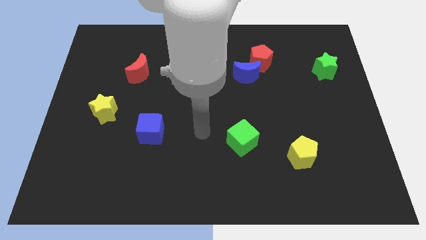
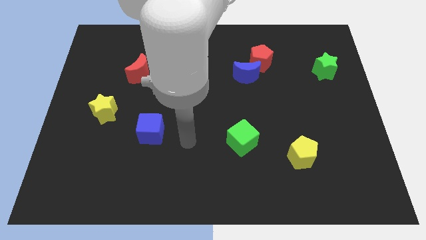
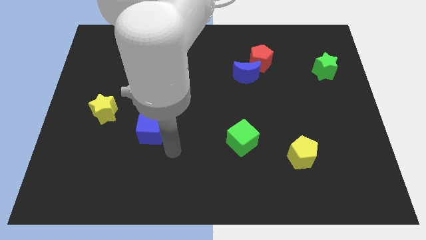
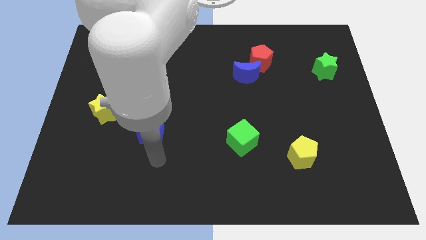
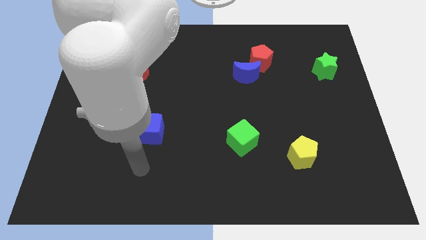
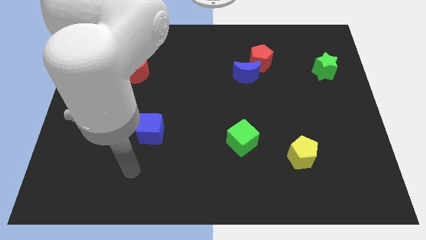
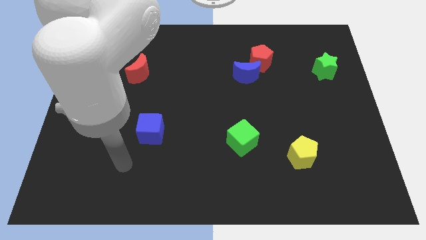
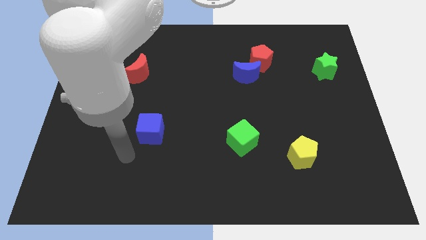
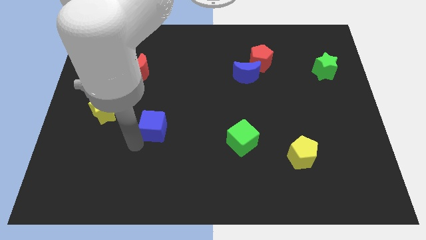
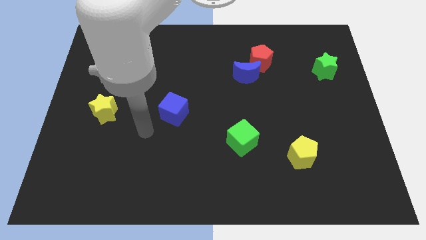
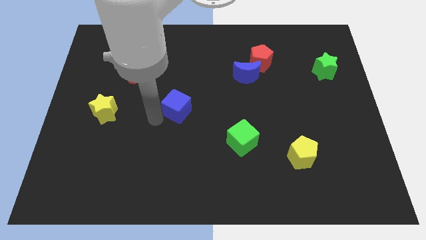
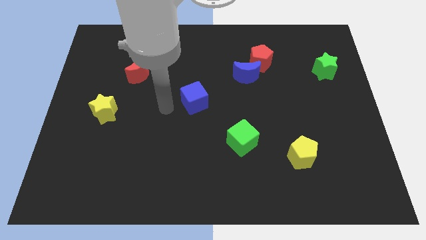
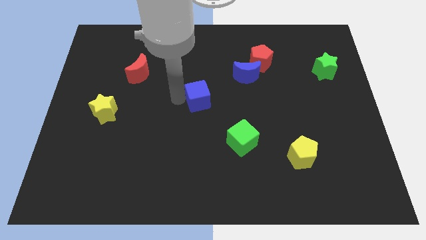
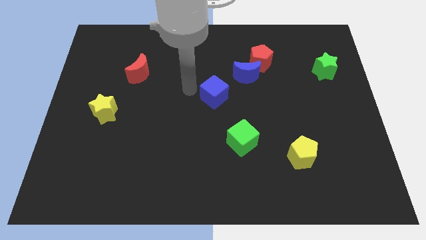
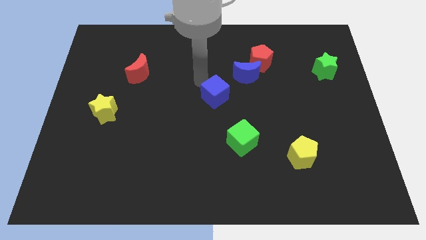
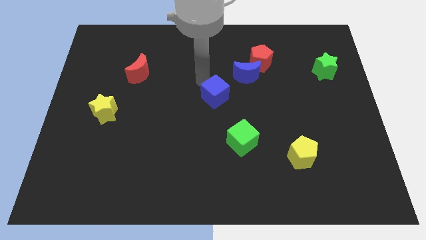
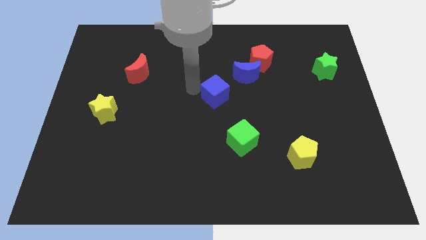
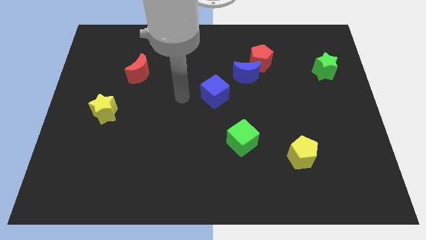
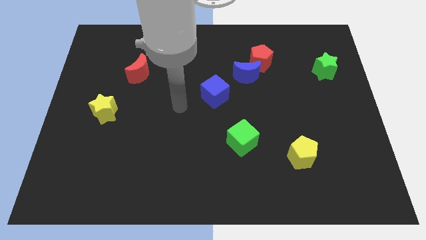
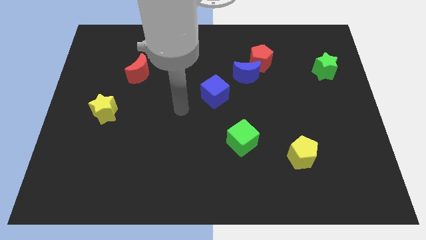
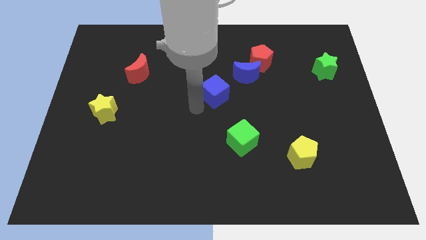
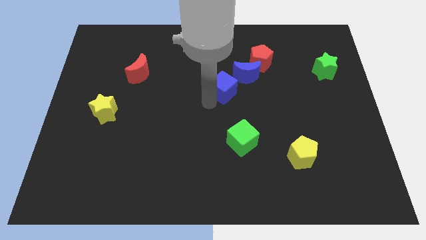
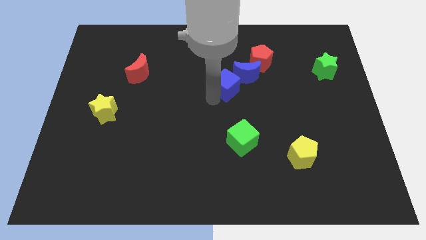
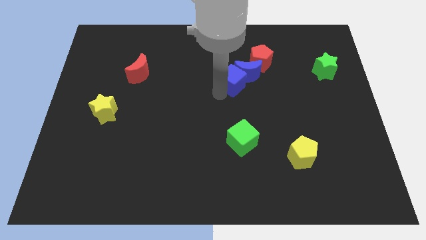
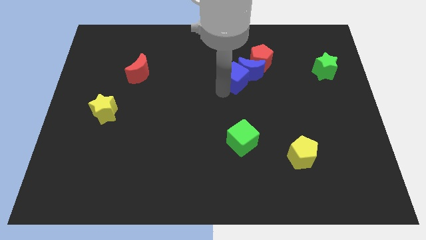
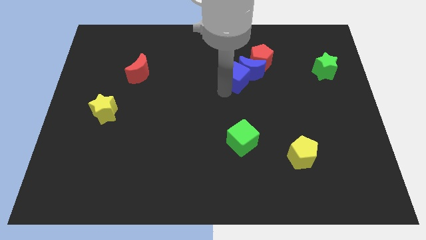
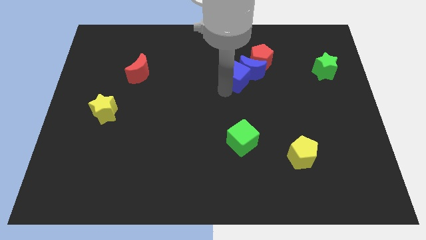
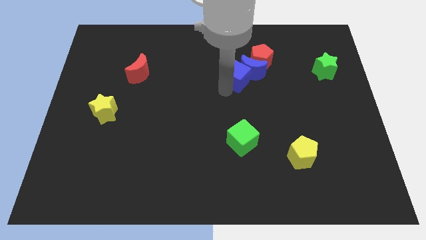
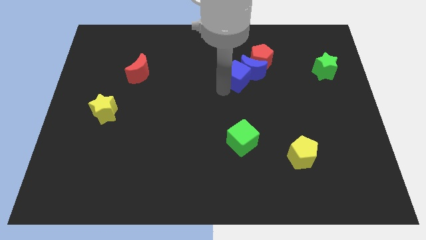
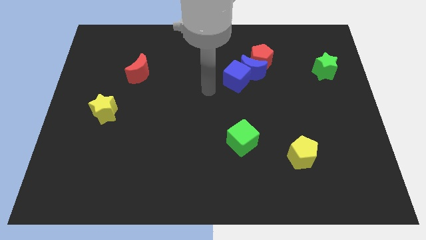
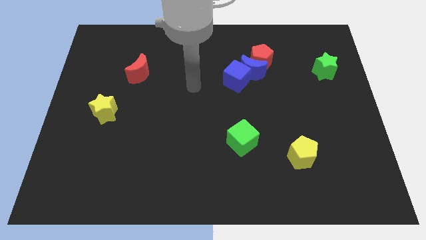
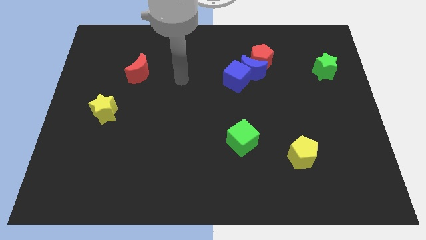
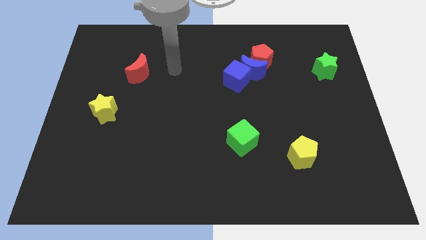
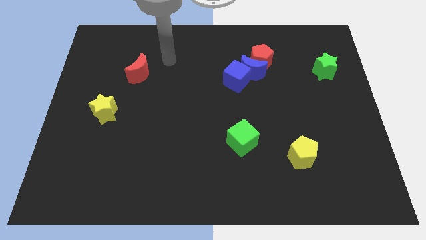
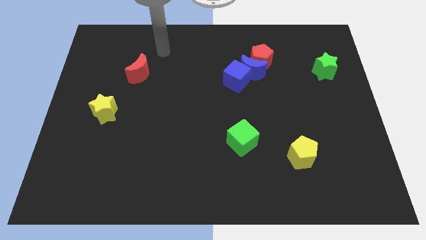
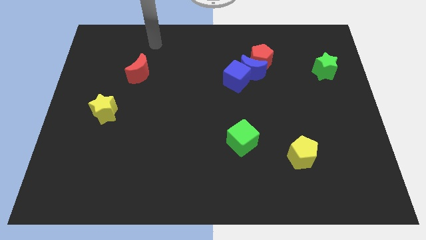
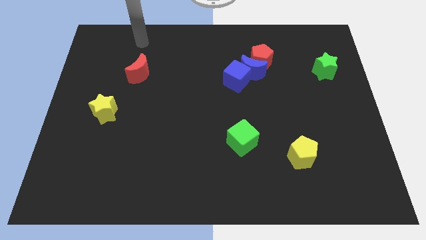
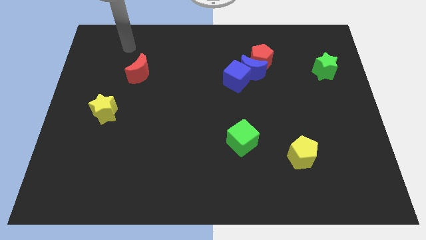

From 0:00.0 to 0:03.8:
push blue cube into the blue crescent

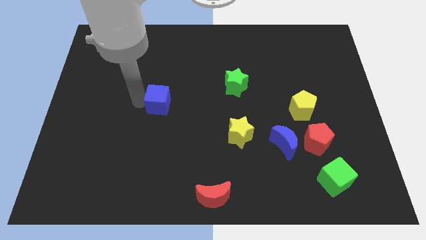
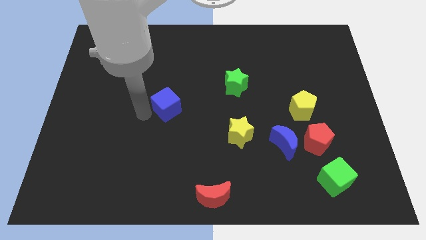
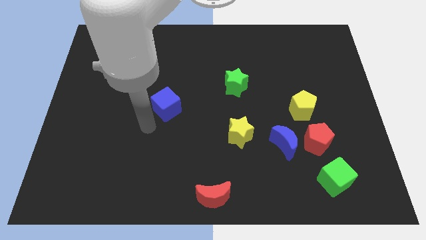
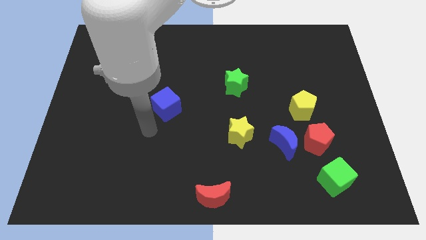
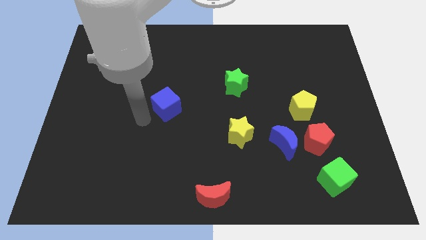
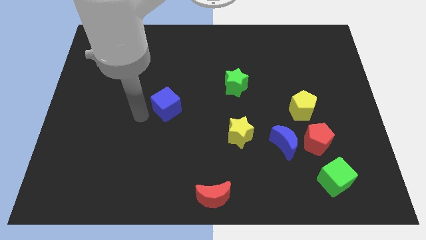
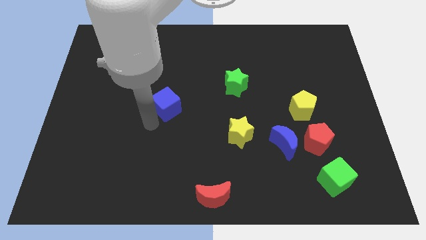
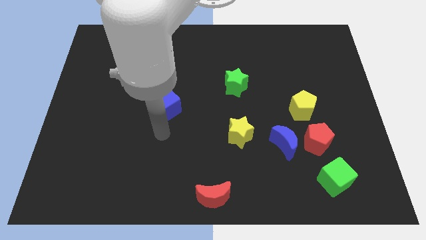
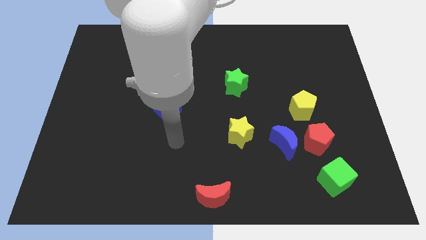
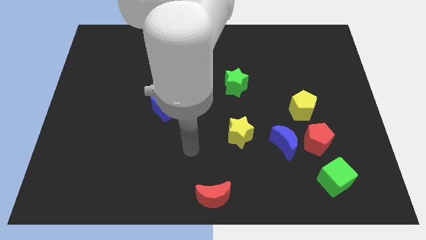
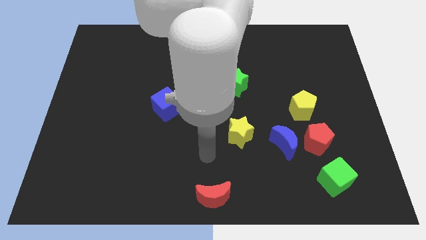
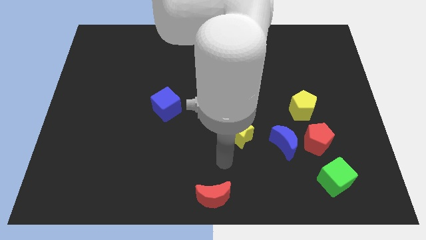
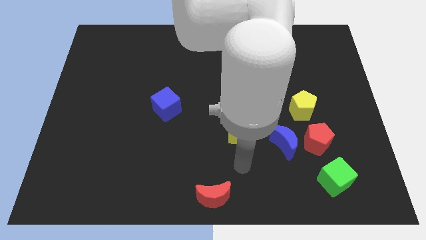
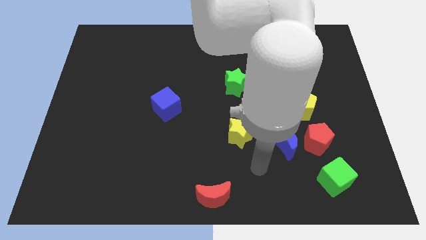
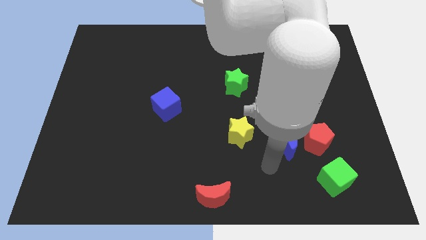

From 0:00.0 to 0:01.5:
move away from the blue cube

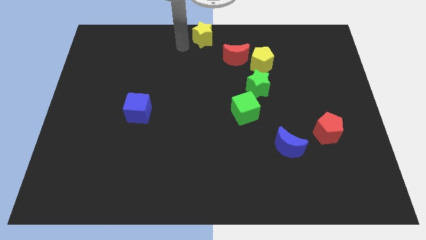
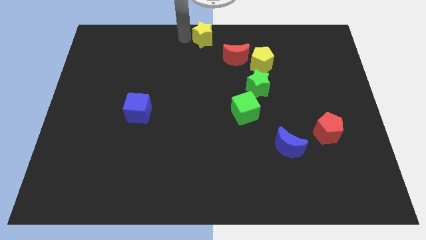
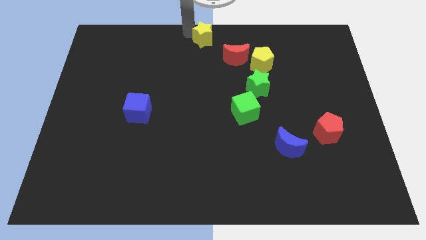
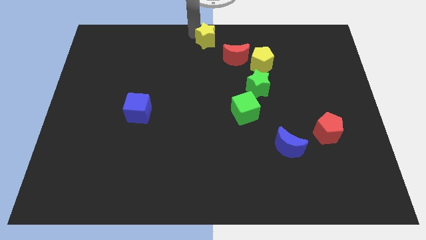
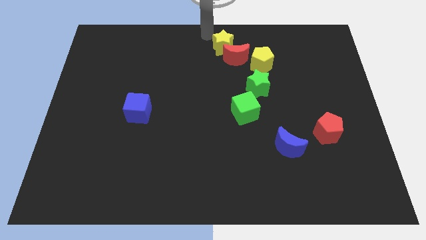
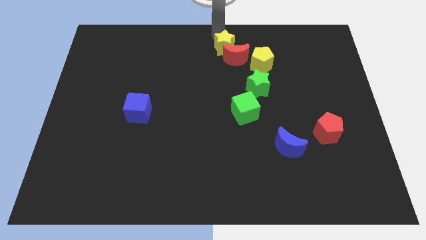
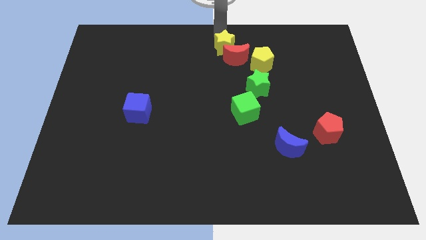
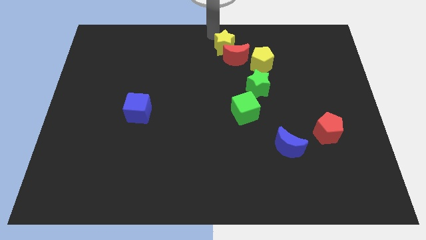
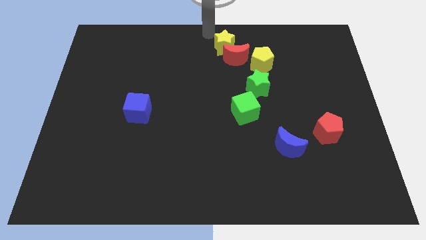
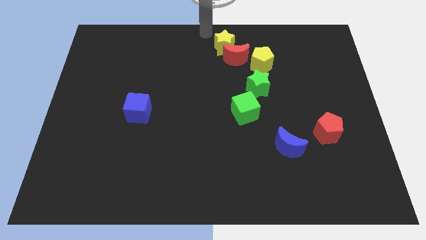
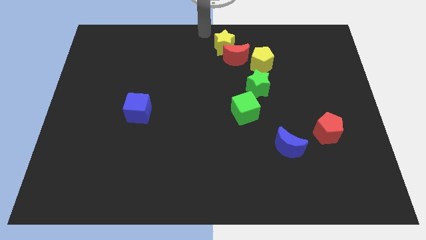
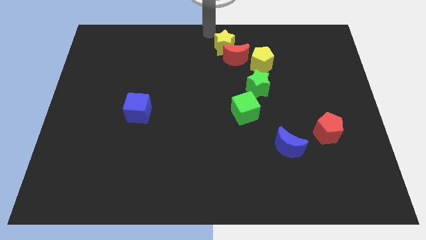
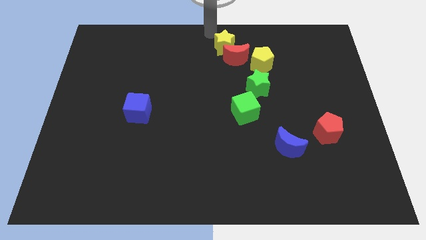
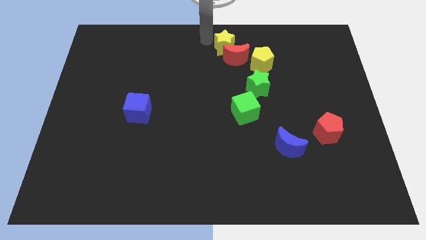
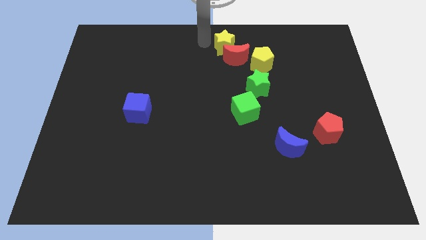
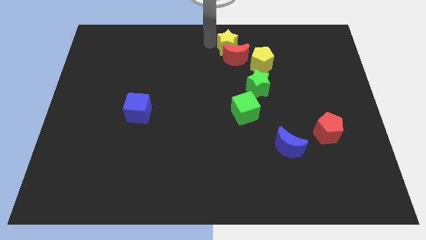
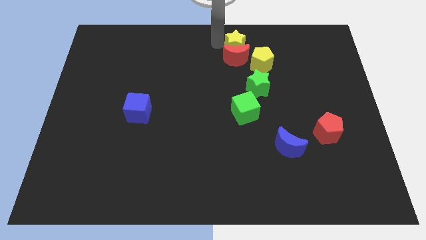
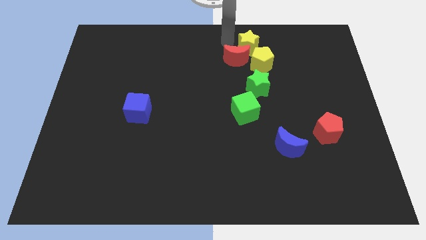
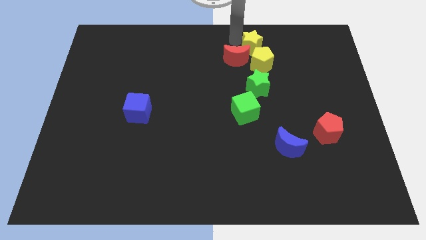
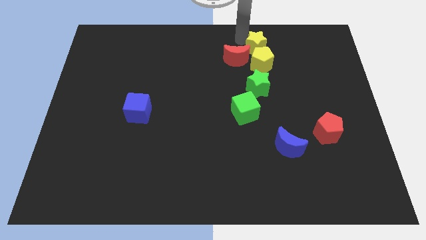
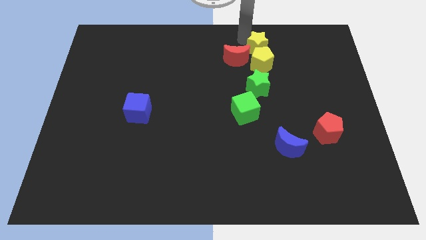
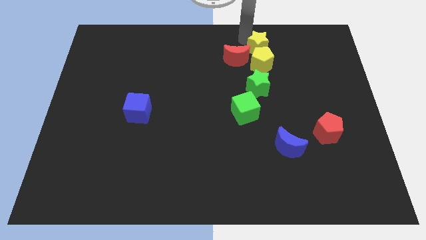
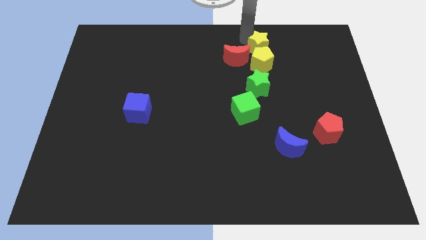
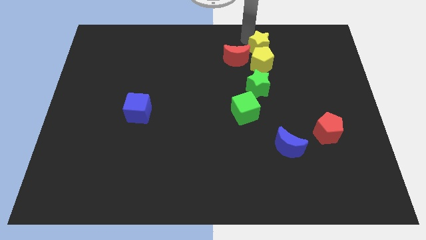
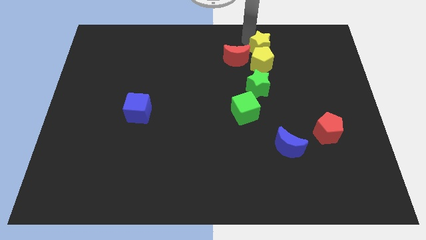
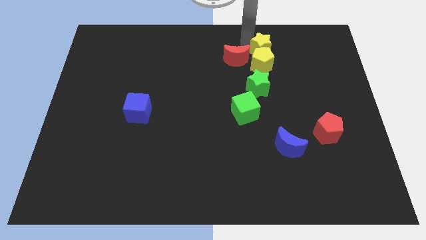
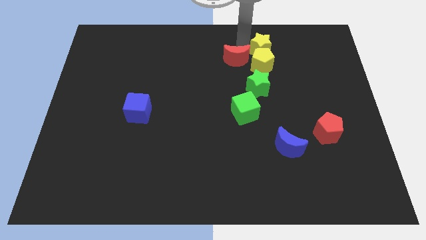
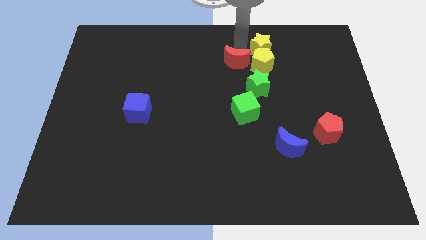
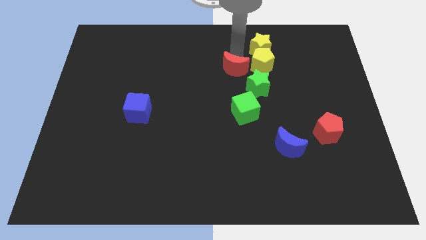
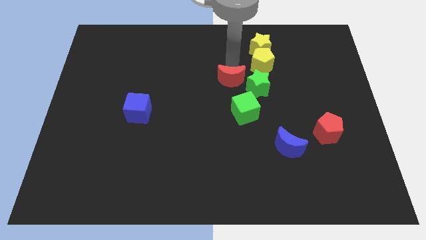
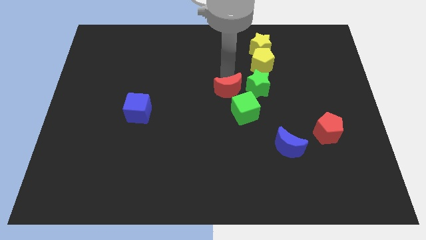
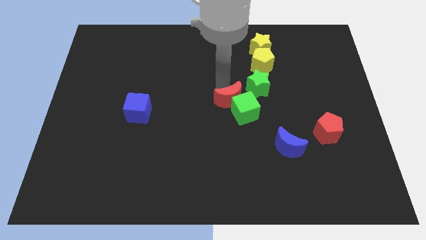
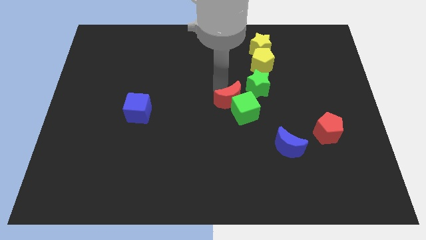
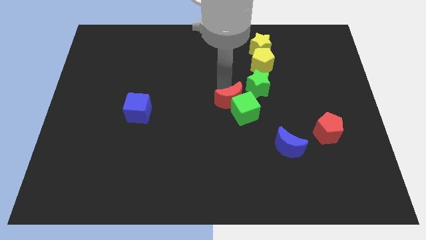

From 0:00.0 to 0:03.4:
push the red crescent into green cube

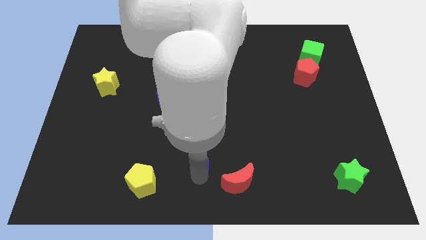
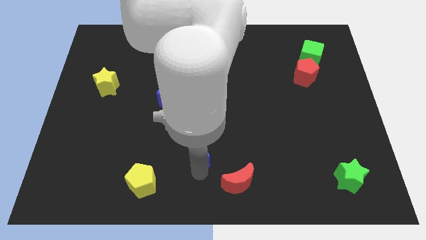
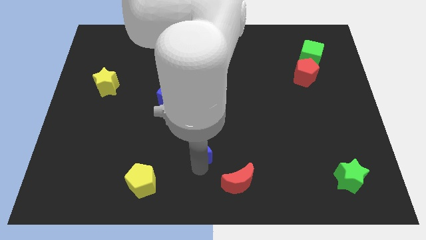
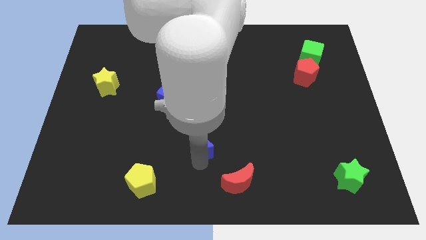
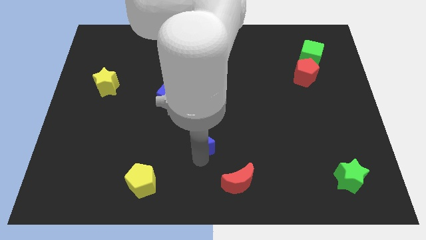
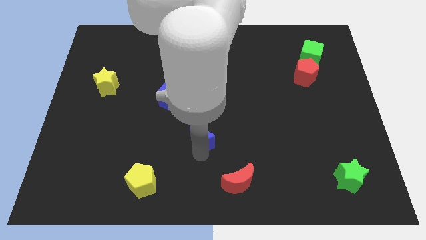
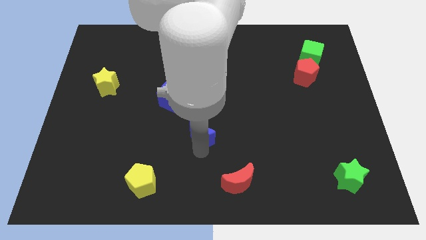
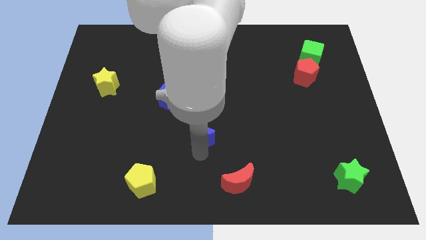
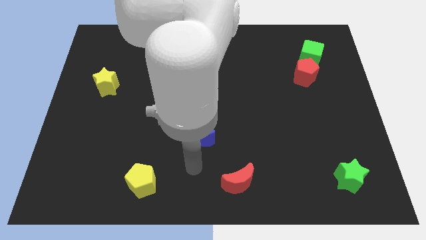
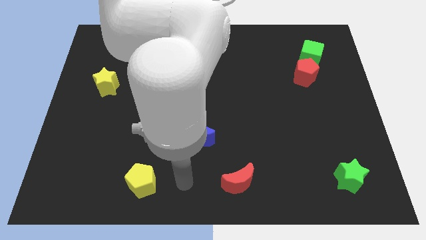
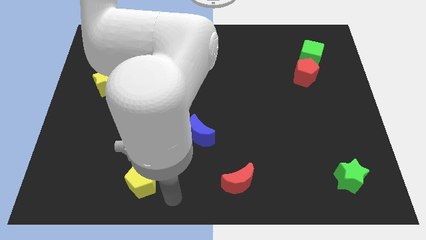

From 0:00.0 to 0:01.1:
push the blue crescent upwards
